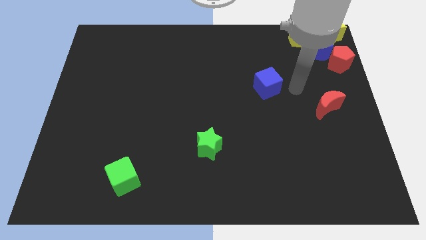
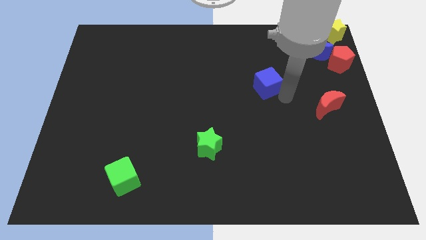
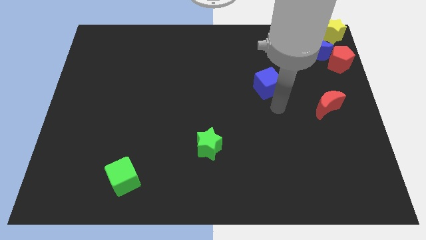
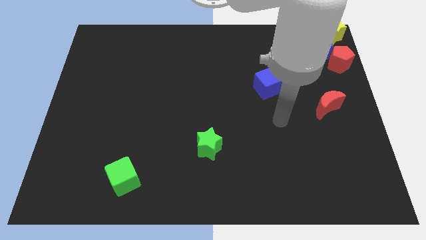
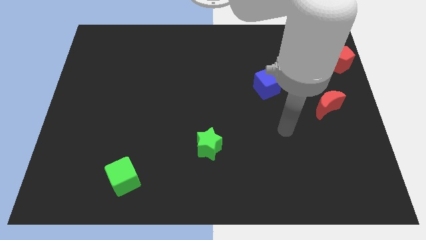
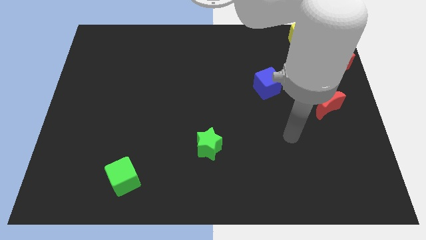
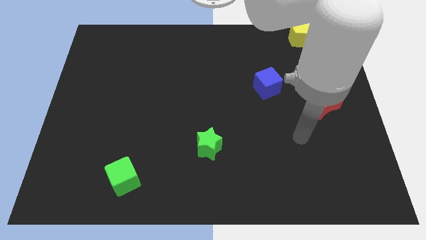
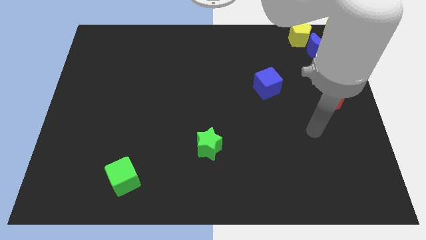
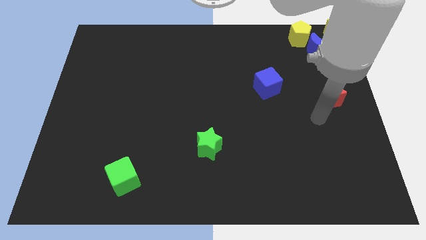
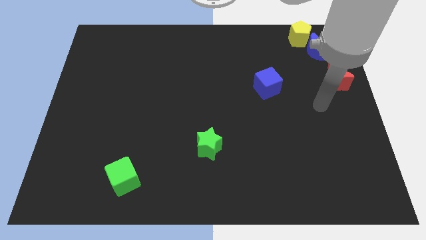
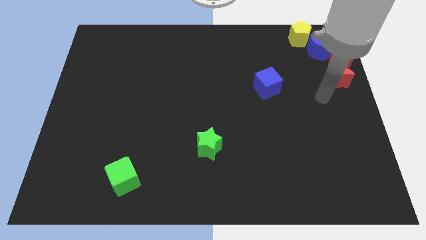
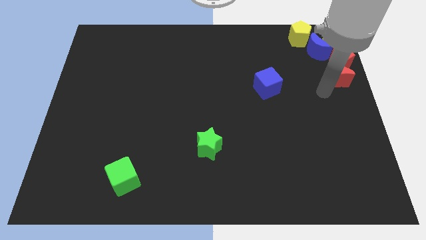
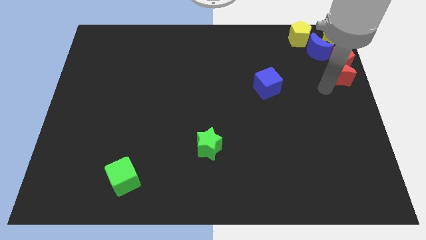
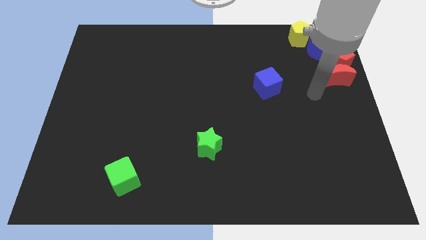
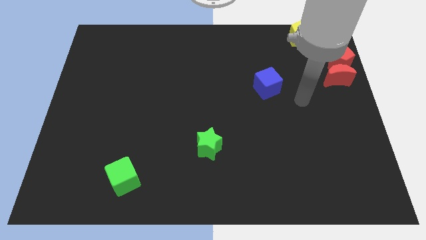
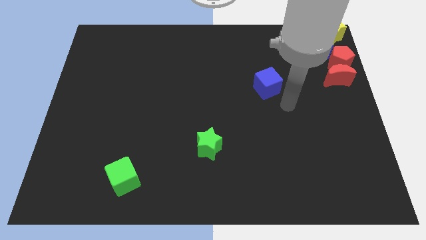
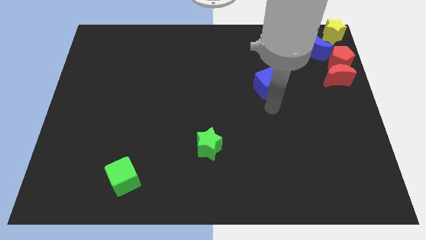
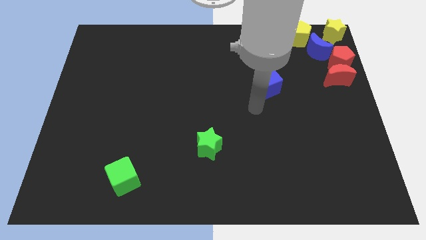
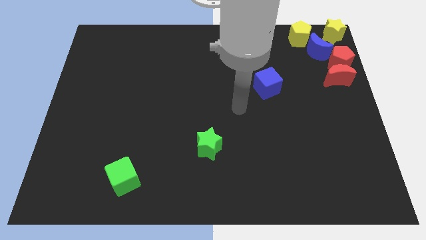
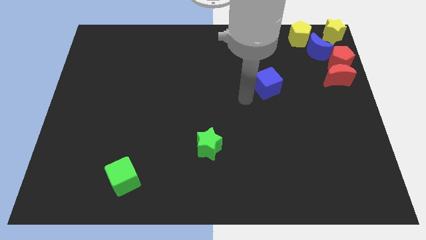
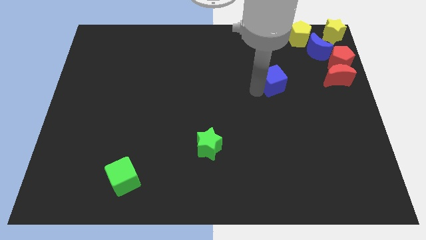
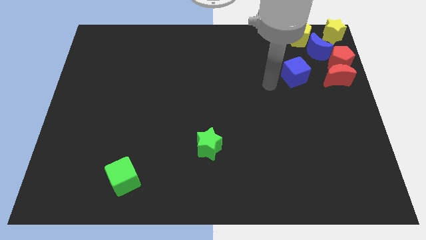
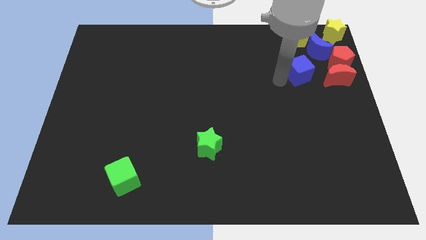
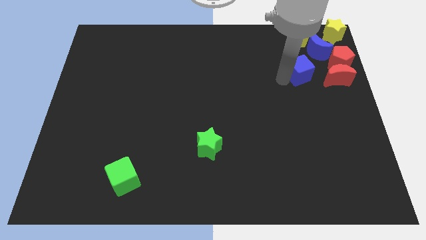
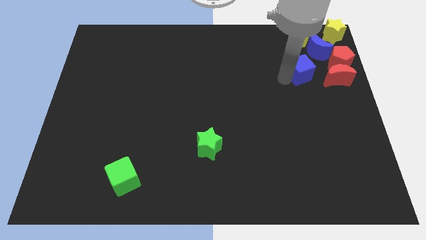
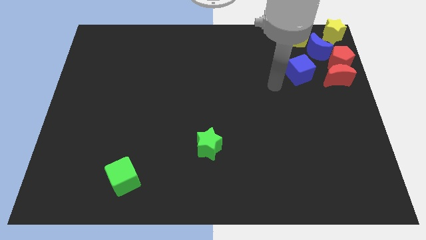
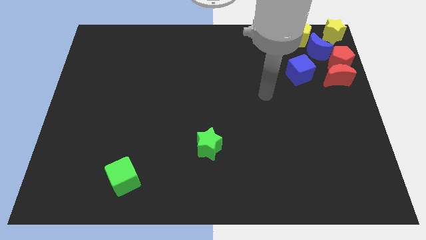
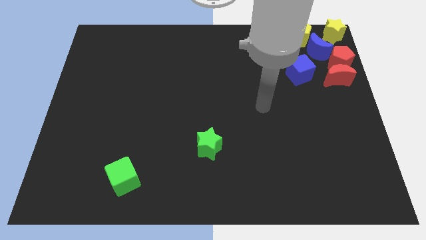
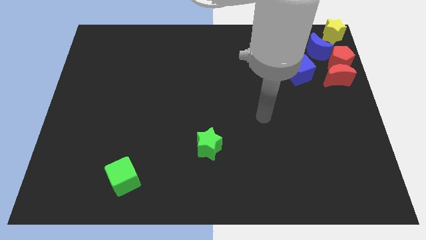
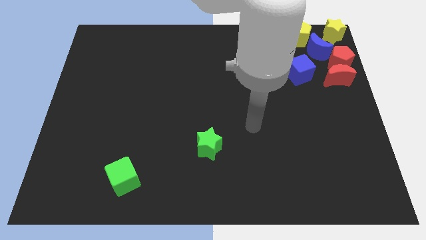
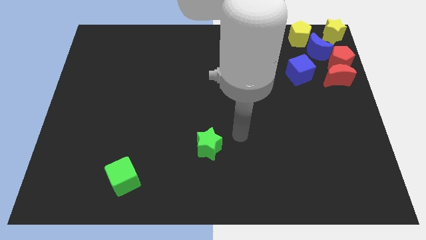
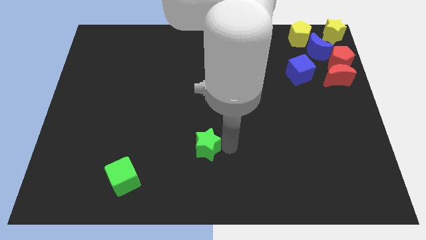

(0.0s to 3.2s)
push the red moon and blue cube towards up

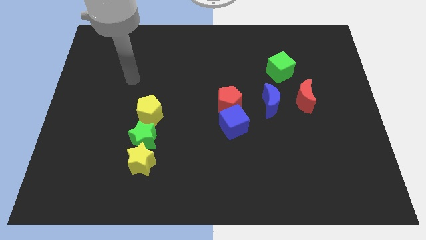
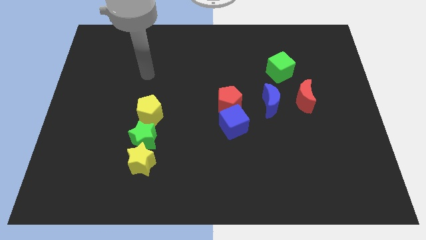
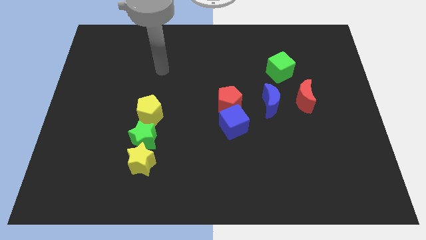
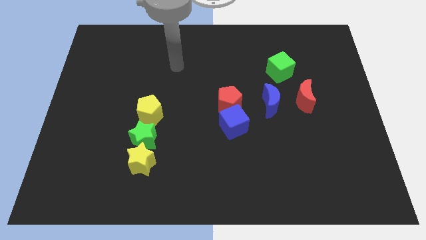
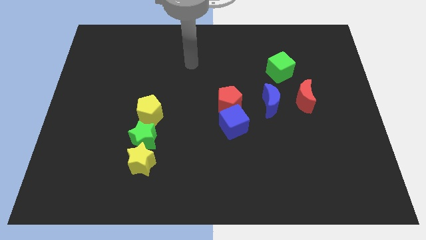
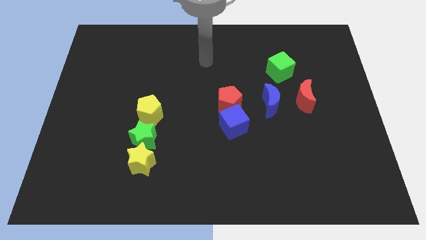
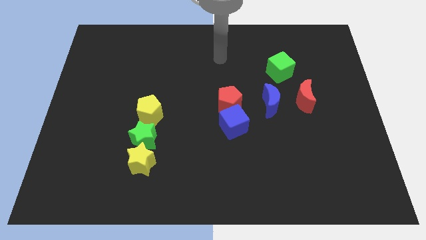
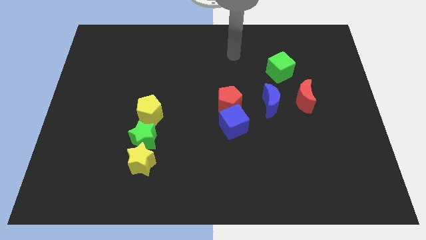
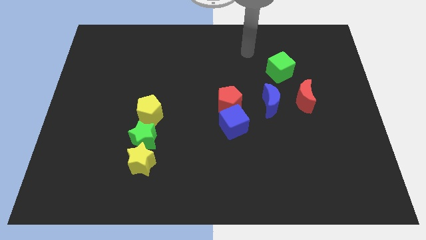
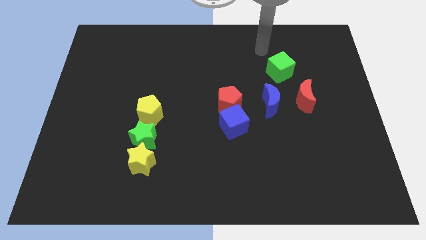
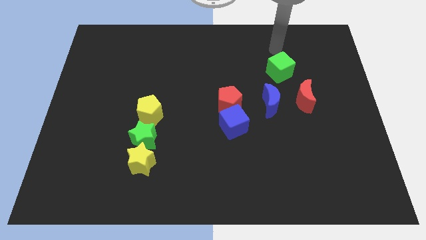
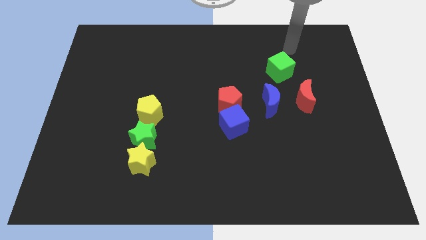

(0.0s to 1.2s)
put your hand vertically above the green cube

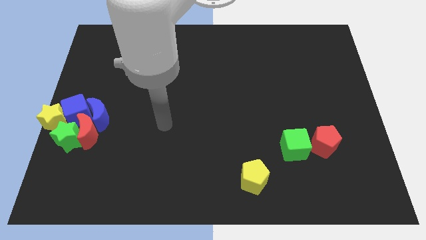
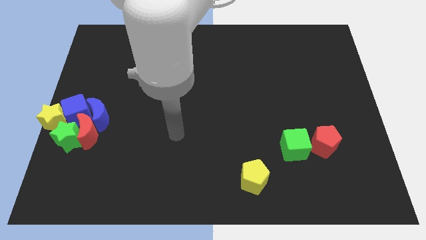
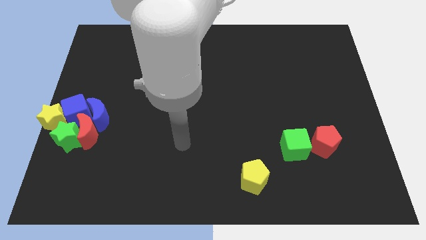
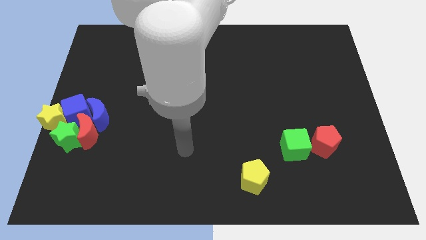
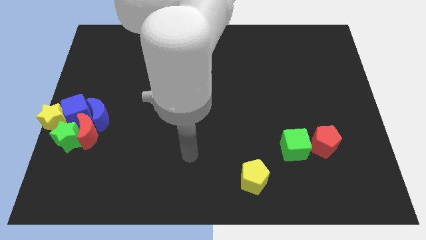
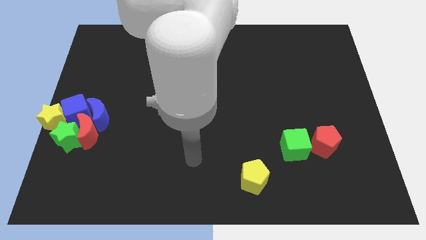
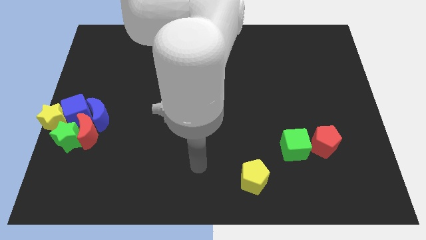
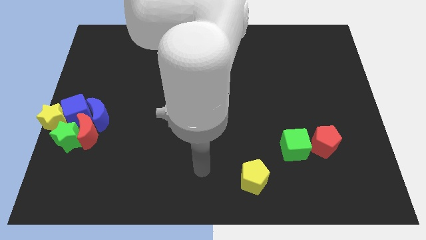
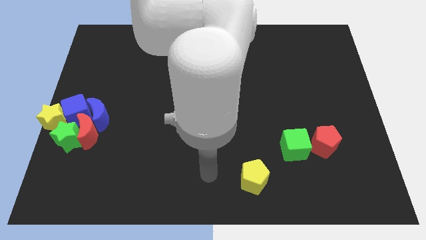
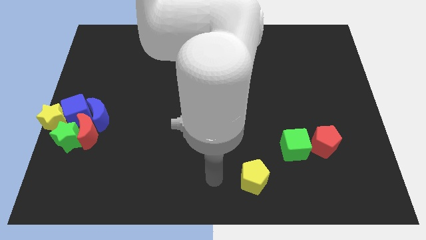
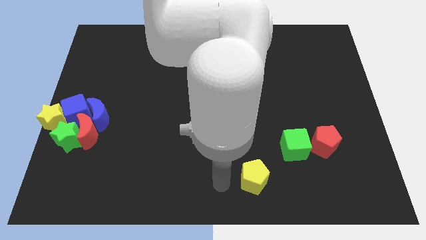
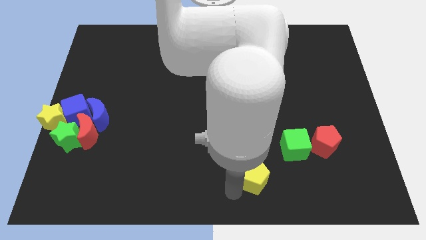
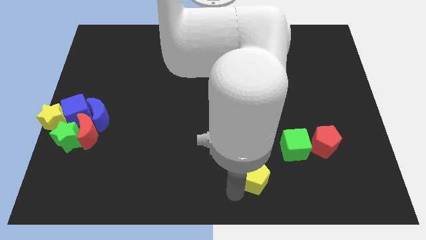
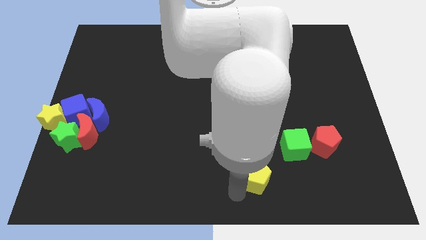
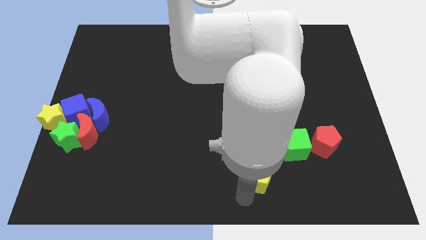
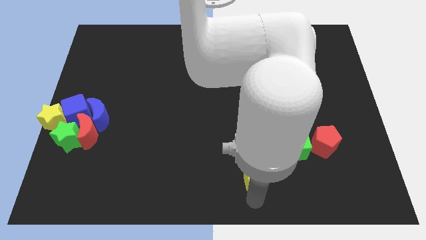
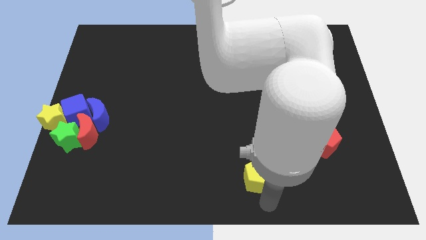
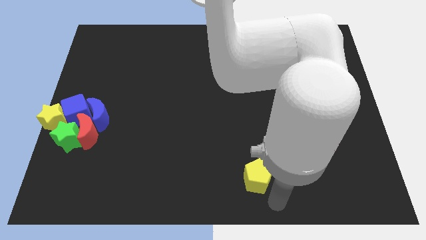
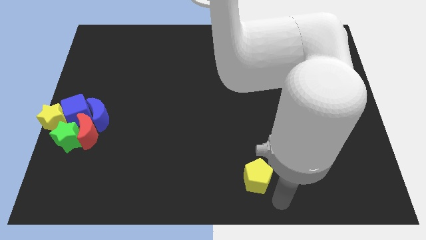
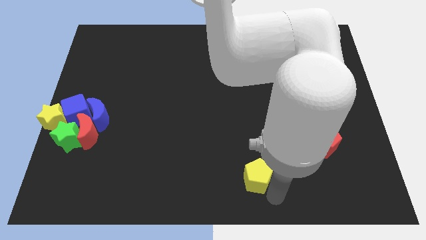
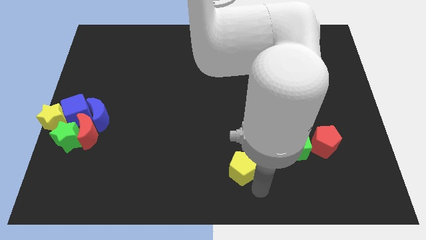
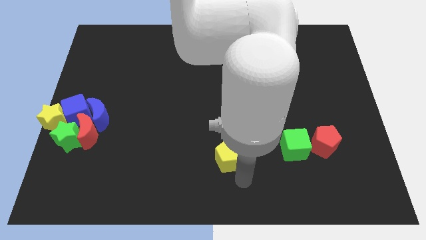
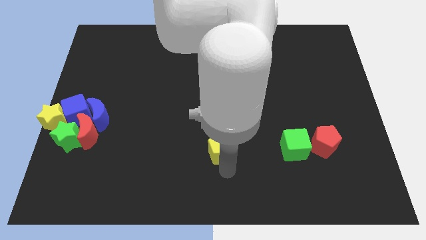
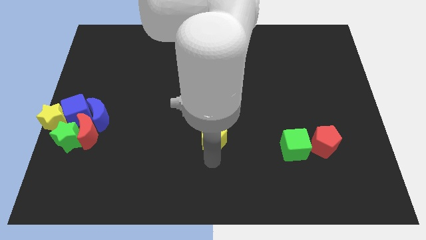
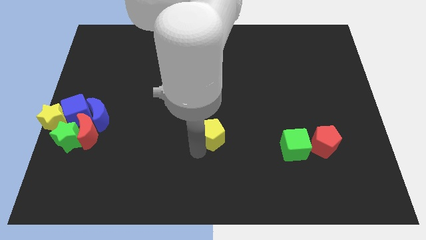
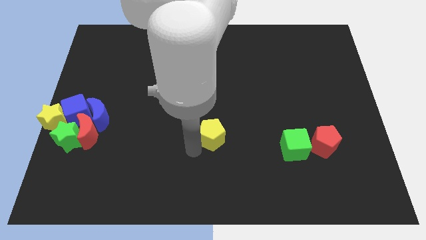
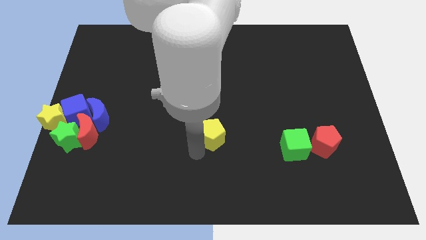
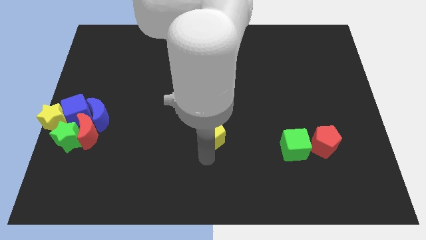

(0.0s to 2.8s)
move yellow pentagon slightly upwards

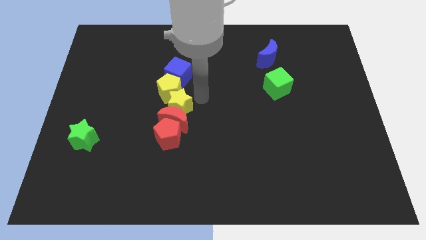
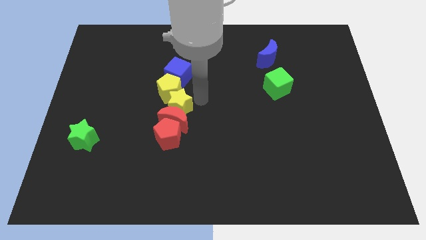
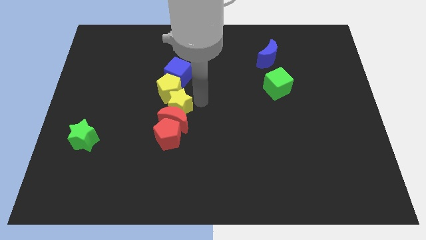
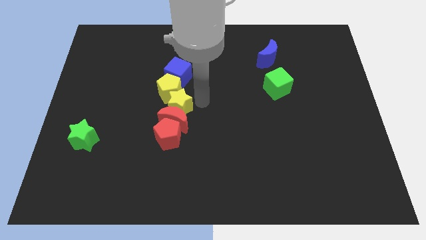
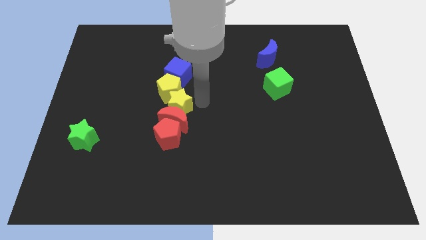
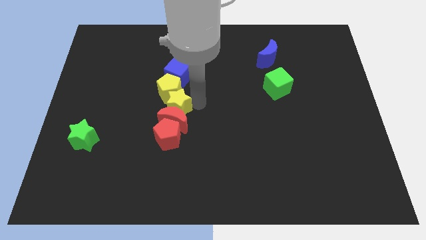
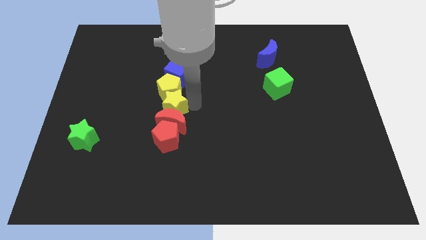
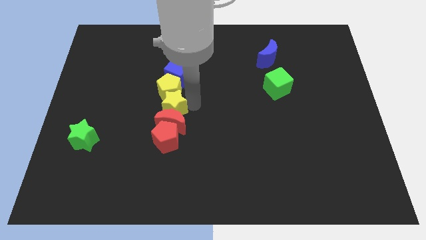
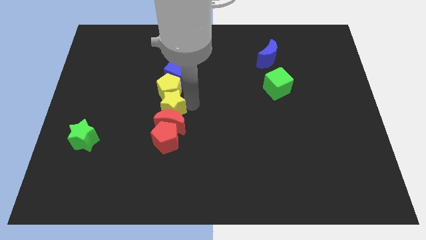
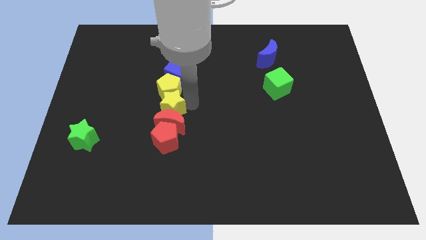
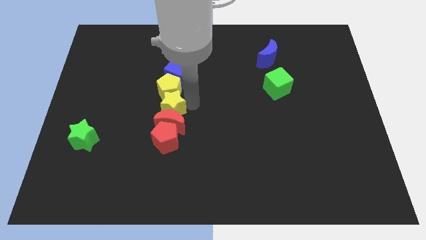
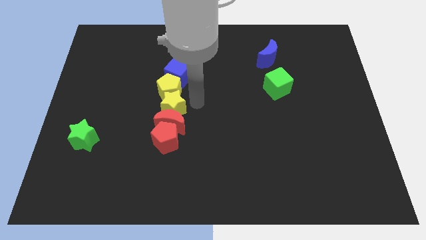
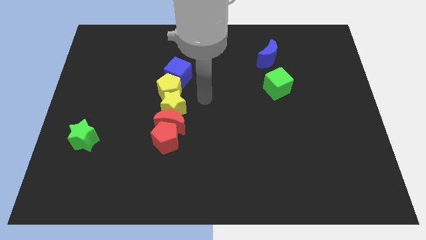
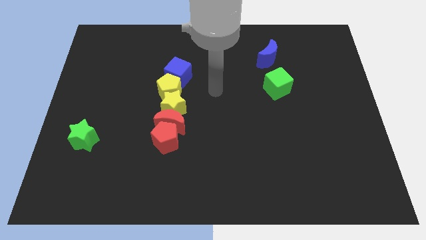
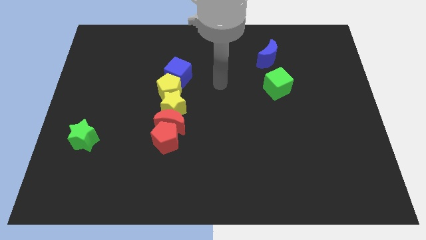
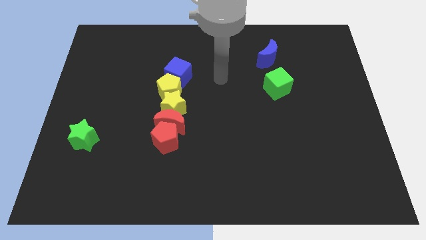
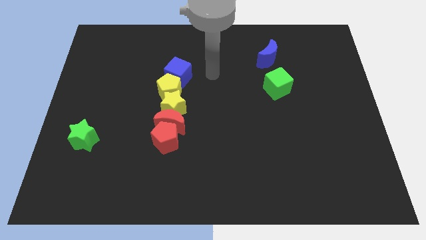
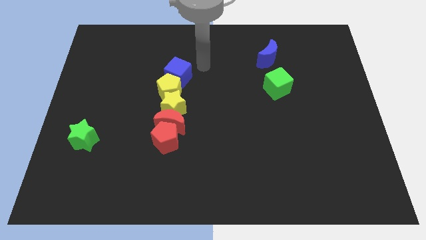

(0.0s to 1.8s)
slightly move yellow star
